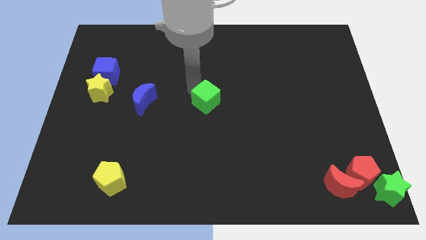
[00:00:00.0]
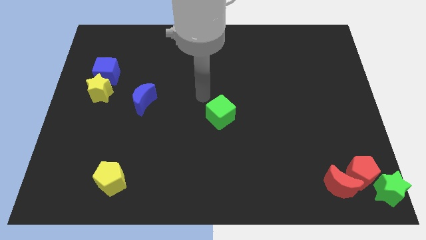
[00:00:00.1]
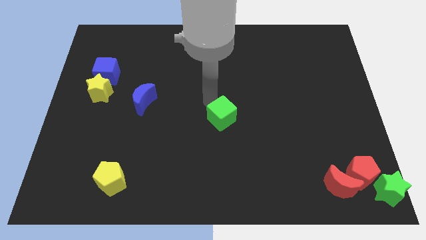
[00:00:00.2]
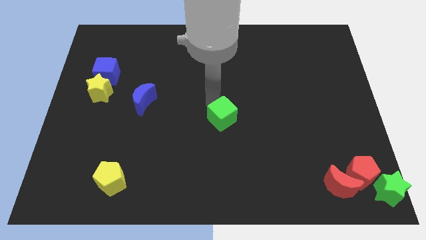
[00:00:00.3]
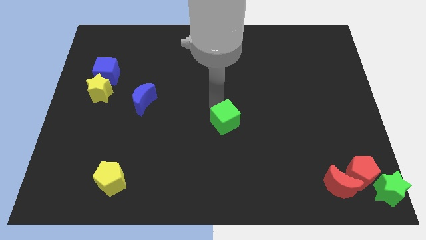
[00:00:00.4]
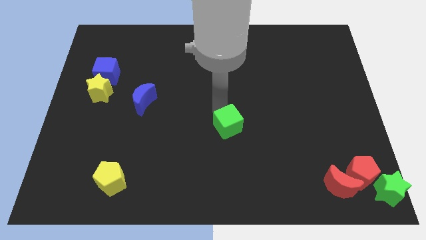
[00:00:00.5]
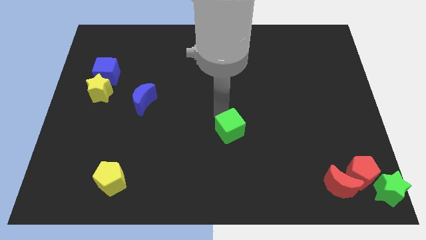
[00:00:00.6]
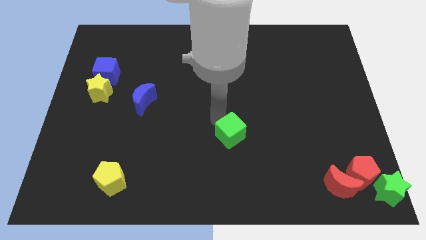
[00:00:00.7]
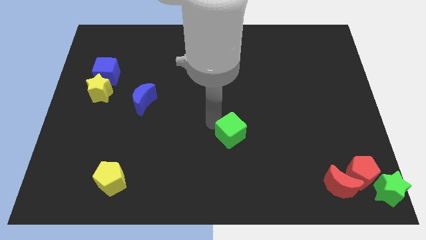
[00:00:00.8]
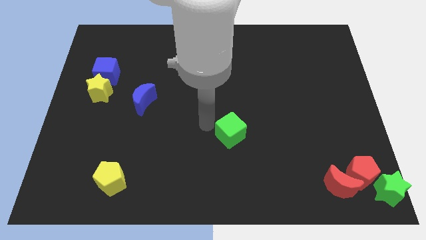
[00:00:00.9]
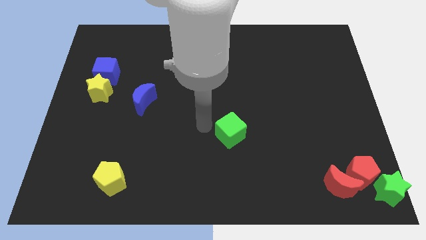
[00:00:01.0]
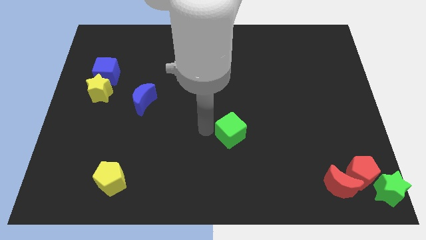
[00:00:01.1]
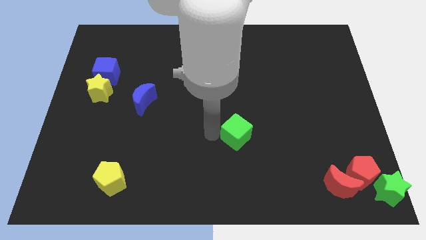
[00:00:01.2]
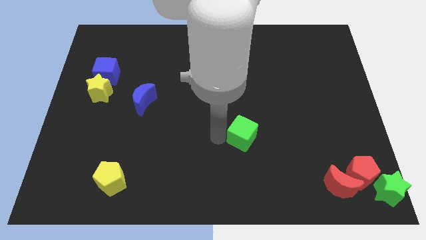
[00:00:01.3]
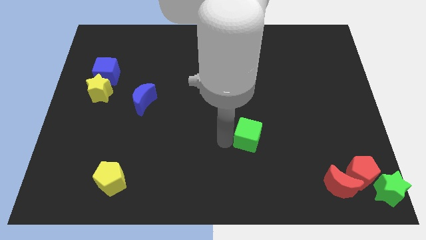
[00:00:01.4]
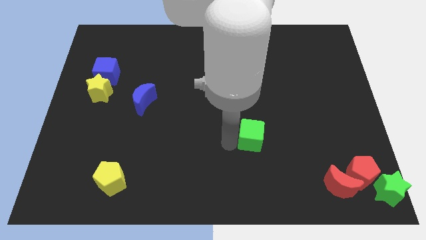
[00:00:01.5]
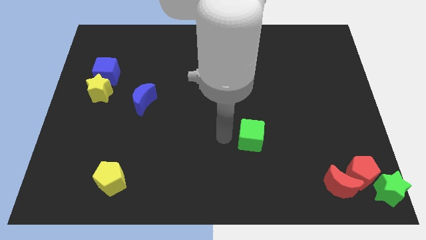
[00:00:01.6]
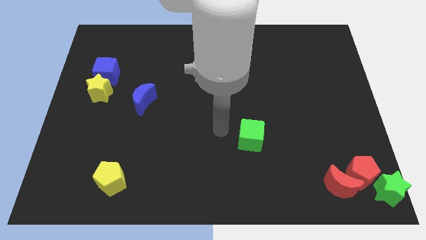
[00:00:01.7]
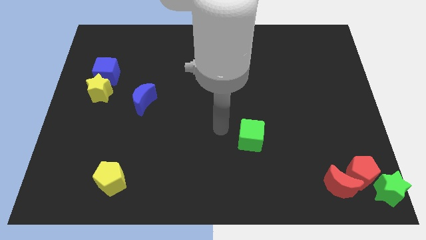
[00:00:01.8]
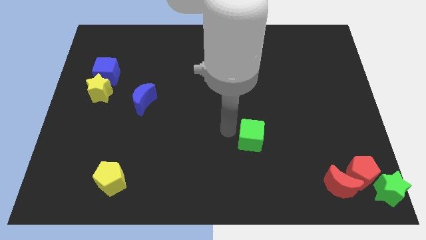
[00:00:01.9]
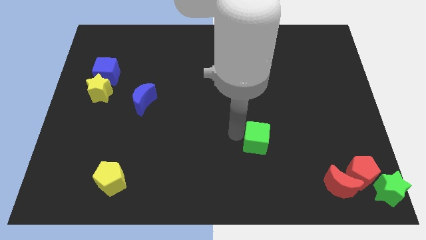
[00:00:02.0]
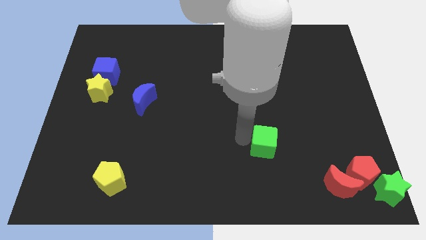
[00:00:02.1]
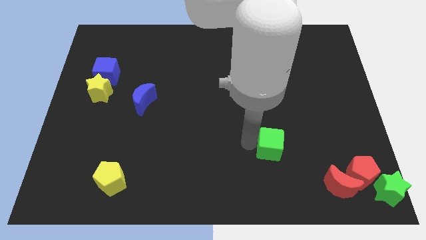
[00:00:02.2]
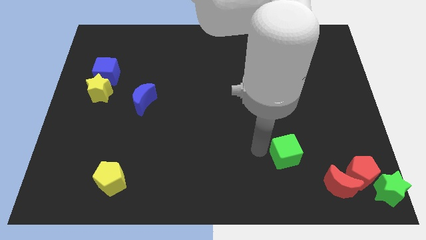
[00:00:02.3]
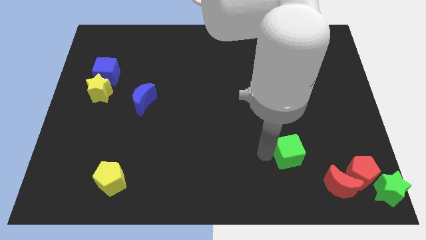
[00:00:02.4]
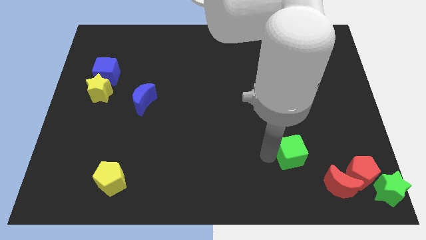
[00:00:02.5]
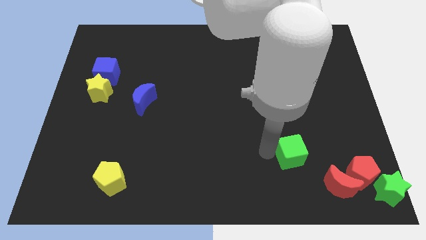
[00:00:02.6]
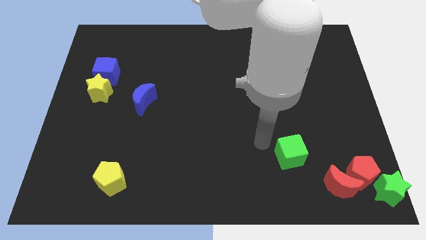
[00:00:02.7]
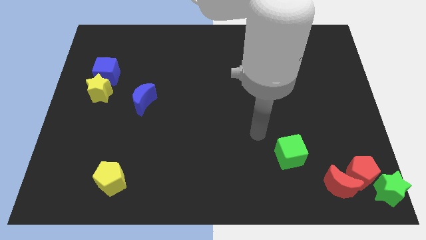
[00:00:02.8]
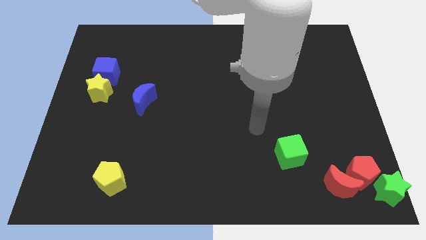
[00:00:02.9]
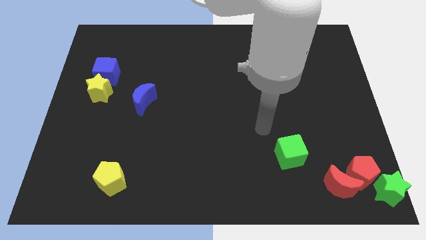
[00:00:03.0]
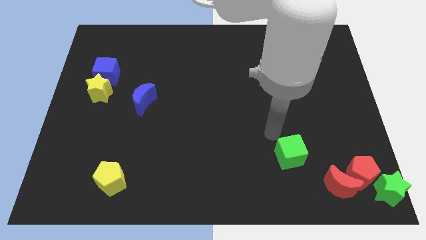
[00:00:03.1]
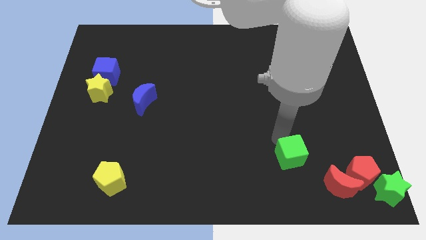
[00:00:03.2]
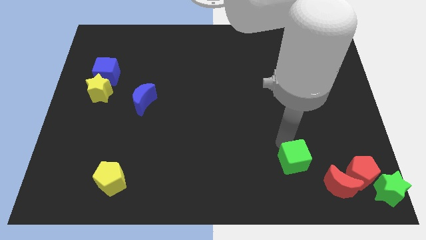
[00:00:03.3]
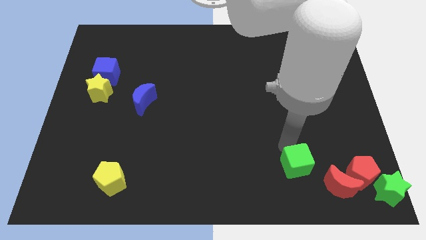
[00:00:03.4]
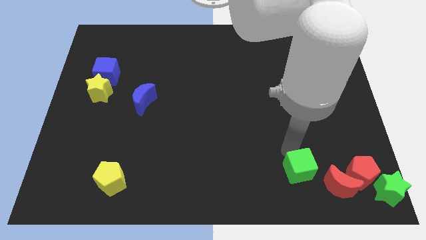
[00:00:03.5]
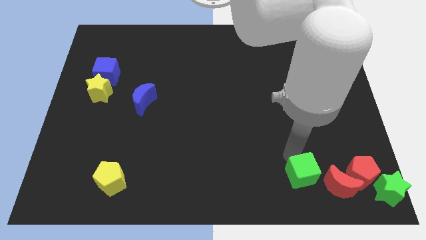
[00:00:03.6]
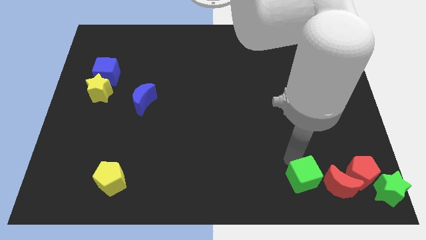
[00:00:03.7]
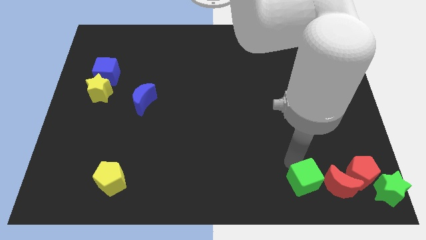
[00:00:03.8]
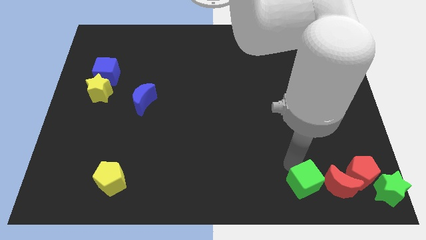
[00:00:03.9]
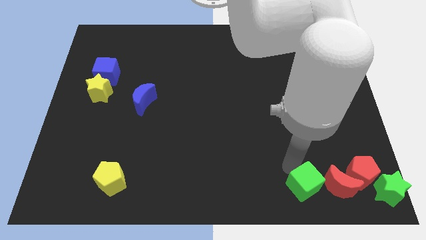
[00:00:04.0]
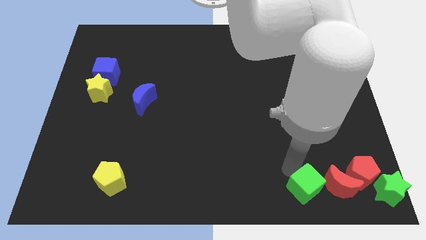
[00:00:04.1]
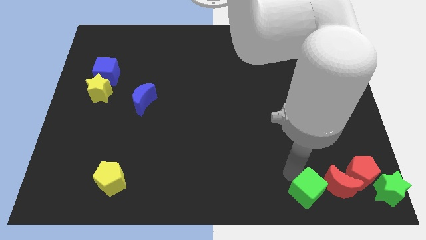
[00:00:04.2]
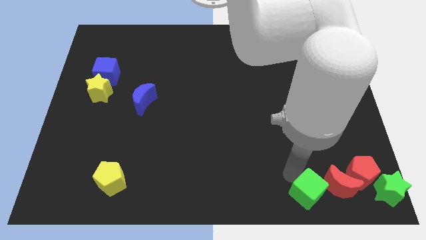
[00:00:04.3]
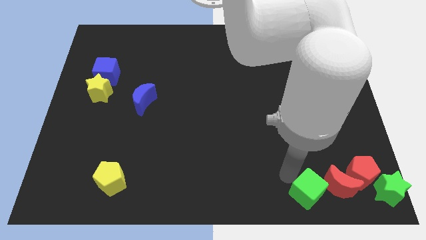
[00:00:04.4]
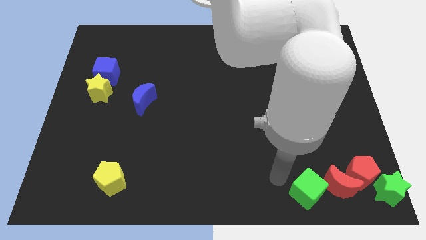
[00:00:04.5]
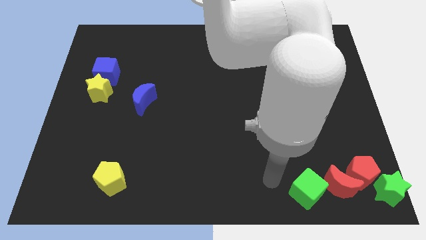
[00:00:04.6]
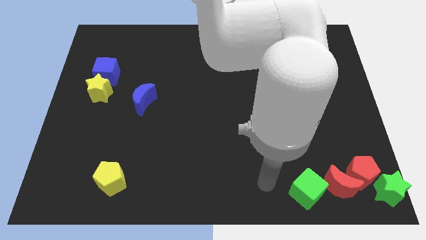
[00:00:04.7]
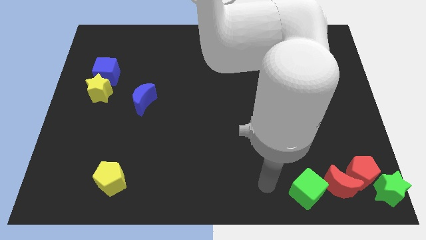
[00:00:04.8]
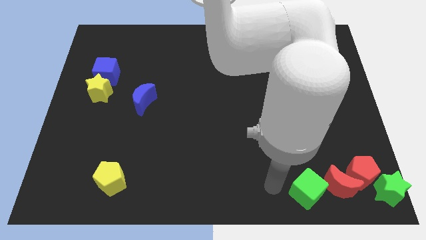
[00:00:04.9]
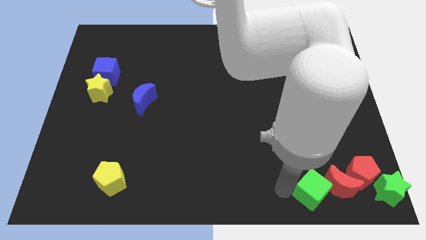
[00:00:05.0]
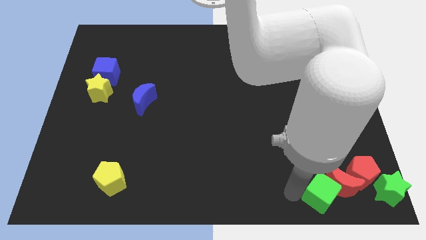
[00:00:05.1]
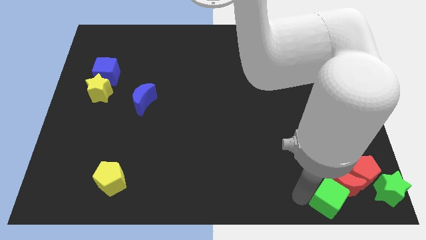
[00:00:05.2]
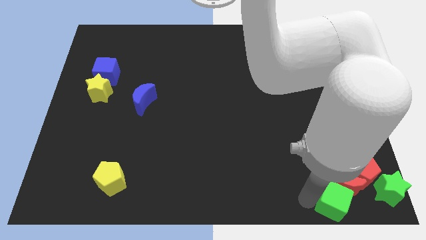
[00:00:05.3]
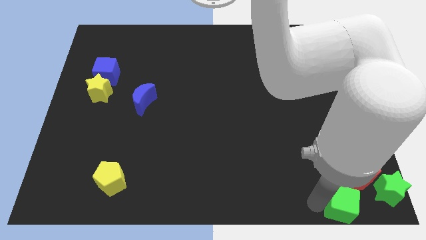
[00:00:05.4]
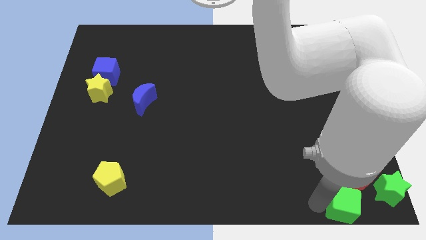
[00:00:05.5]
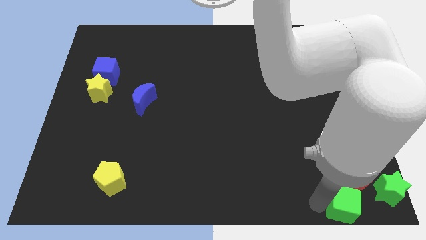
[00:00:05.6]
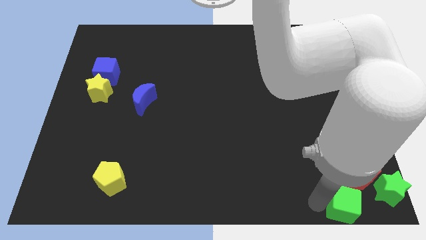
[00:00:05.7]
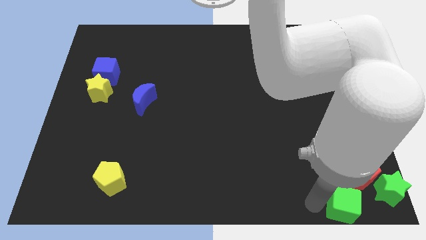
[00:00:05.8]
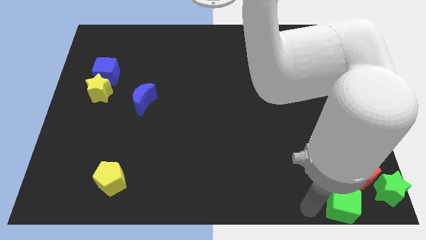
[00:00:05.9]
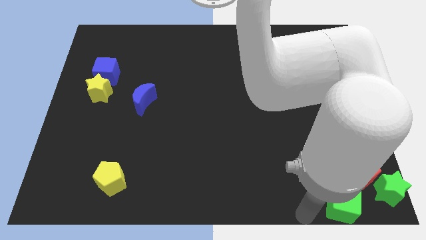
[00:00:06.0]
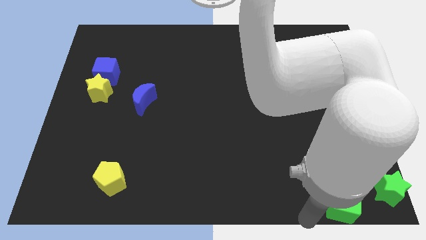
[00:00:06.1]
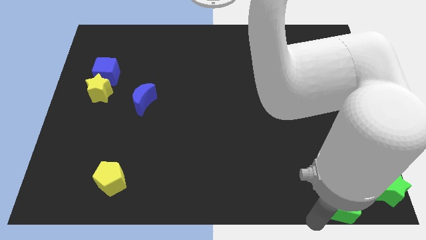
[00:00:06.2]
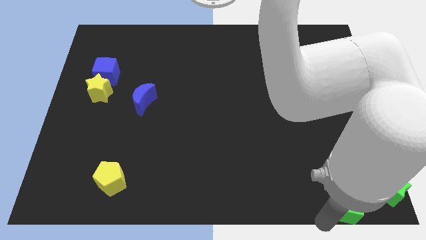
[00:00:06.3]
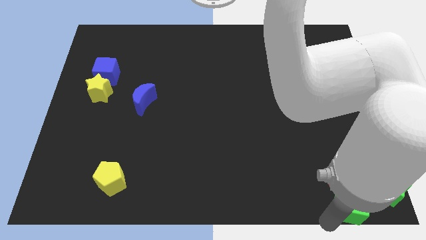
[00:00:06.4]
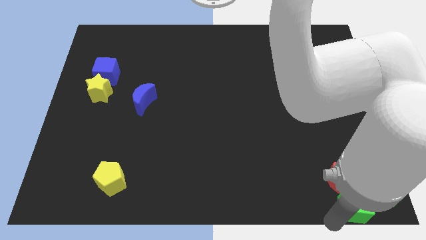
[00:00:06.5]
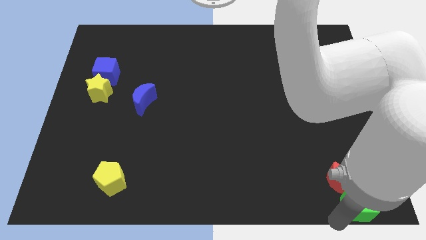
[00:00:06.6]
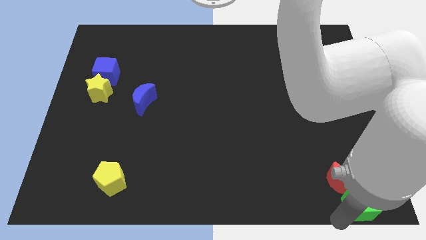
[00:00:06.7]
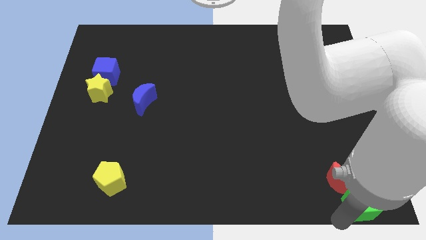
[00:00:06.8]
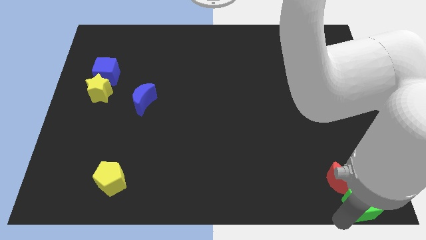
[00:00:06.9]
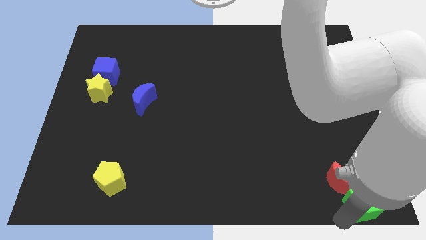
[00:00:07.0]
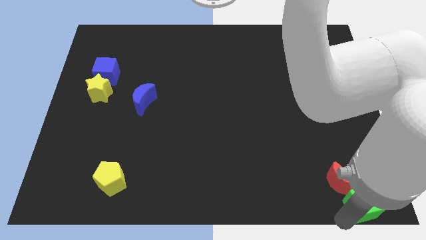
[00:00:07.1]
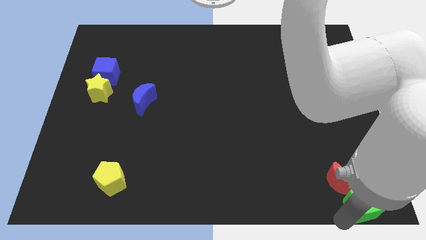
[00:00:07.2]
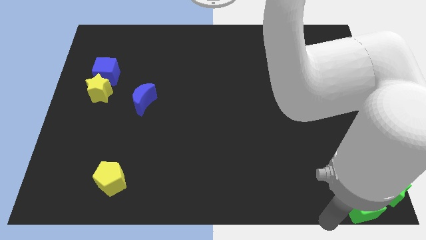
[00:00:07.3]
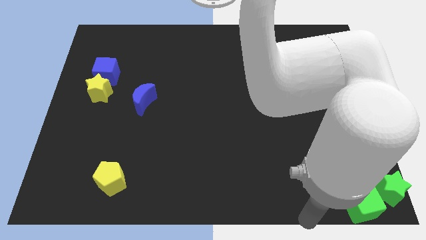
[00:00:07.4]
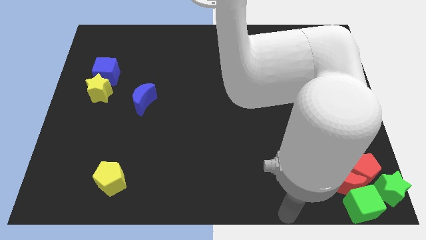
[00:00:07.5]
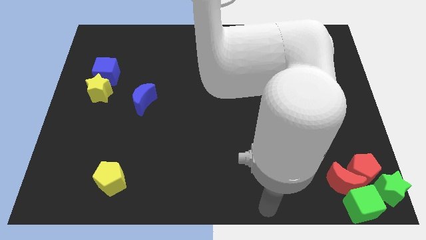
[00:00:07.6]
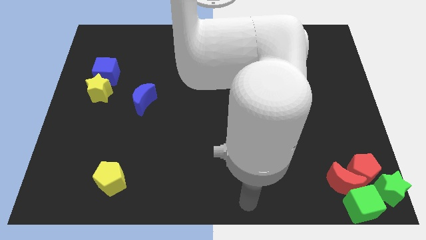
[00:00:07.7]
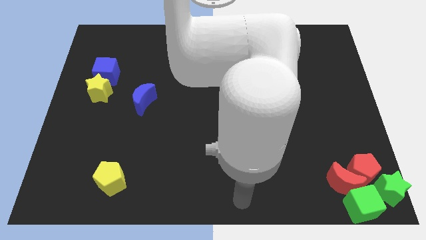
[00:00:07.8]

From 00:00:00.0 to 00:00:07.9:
push the green cube into the group of blocks

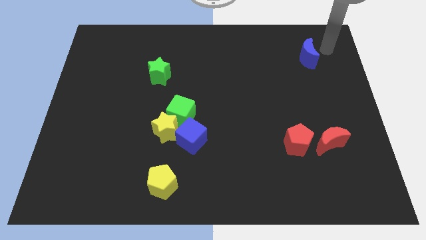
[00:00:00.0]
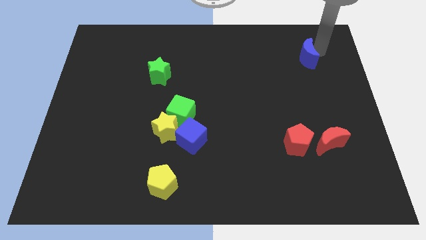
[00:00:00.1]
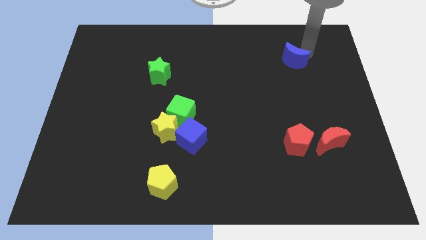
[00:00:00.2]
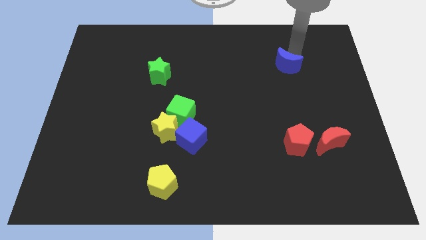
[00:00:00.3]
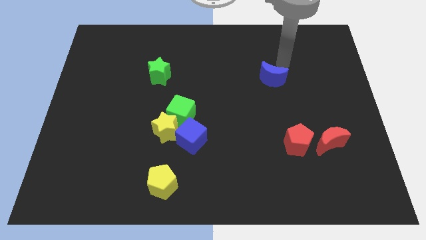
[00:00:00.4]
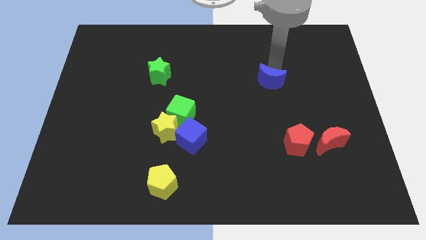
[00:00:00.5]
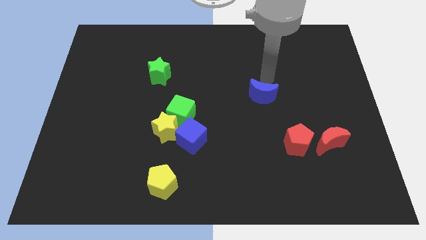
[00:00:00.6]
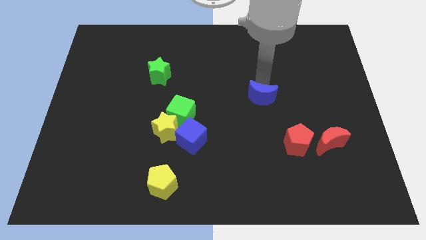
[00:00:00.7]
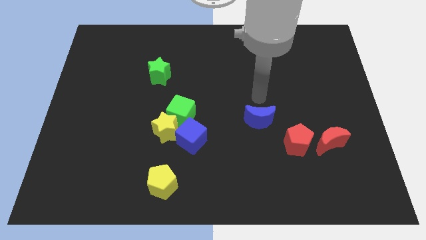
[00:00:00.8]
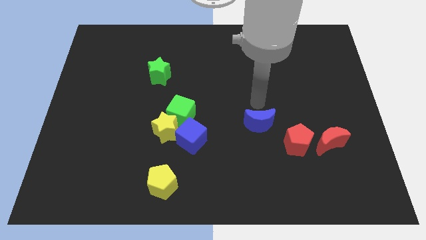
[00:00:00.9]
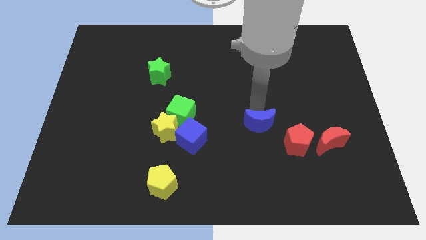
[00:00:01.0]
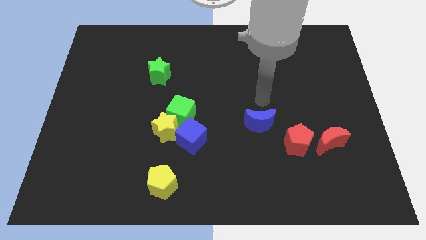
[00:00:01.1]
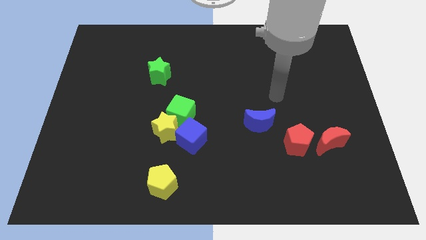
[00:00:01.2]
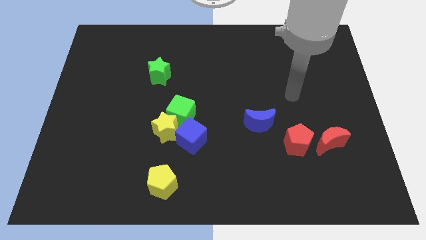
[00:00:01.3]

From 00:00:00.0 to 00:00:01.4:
move the blue moon at the right side of the green cube
